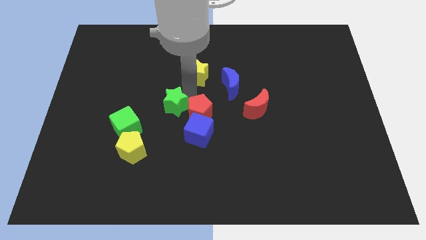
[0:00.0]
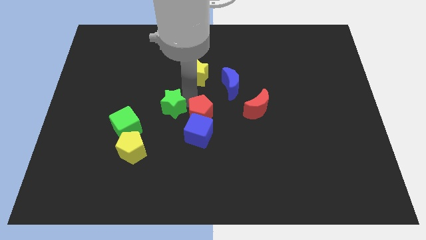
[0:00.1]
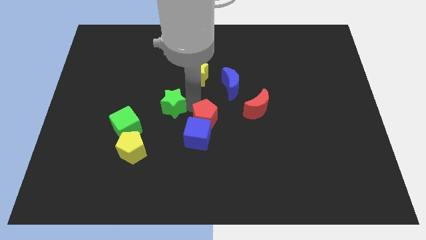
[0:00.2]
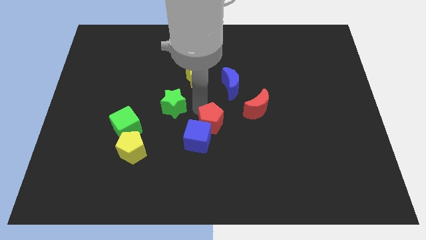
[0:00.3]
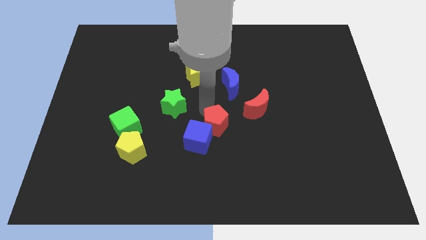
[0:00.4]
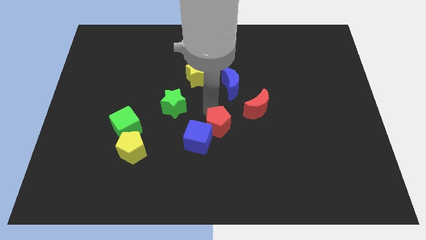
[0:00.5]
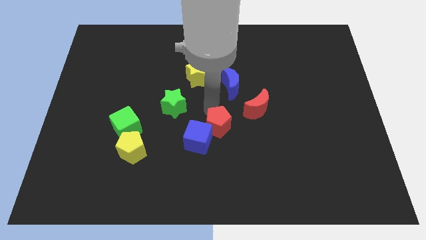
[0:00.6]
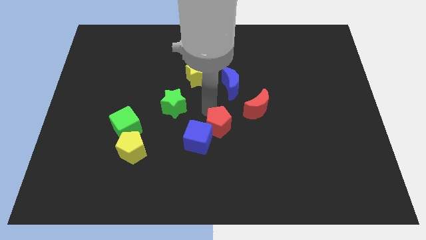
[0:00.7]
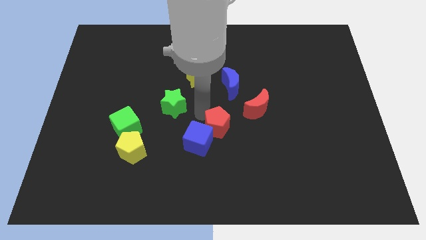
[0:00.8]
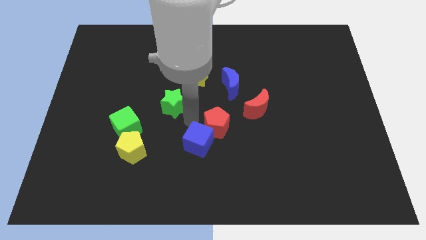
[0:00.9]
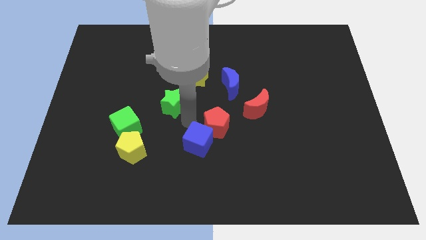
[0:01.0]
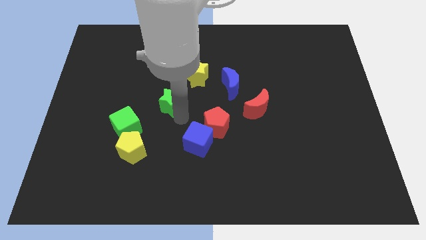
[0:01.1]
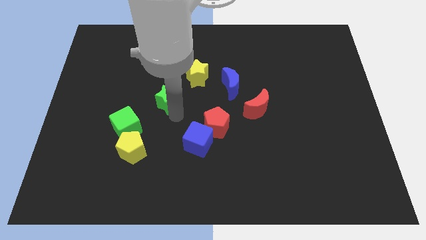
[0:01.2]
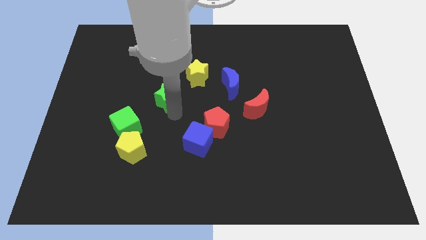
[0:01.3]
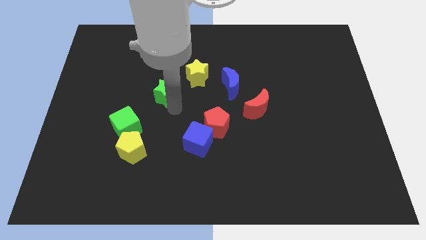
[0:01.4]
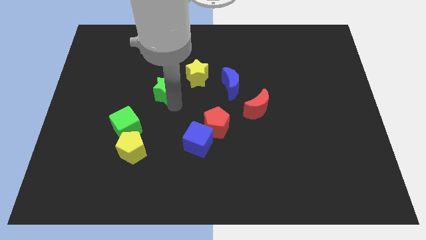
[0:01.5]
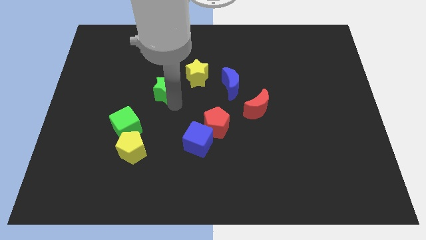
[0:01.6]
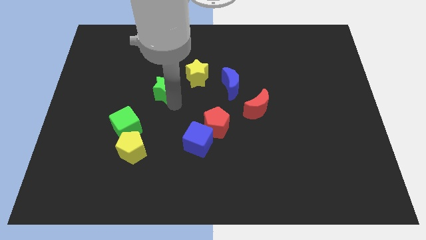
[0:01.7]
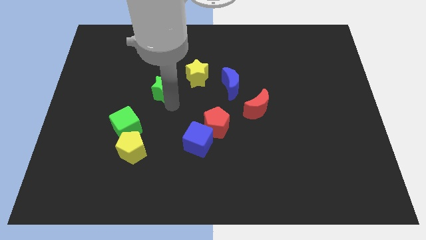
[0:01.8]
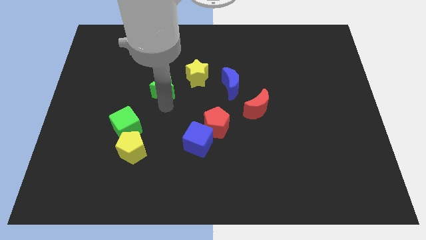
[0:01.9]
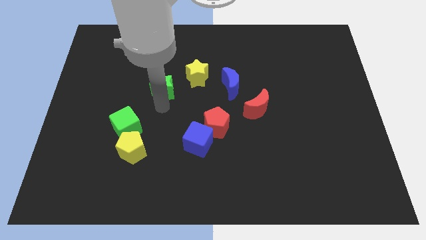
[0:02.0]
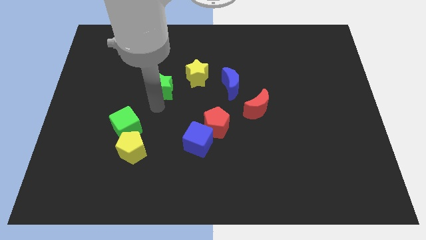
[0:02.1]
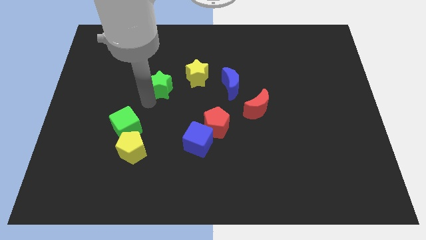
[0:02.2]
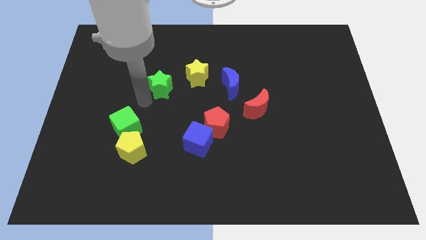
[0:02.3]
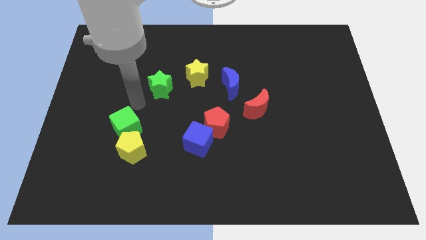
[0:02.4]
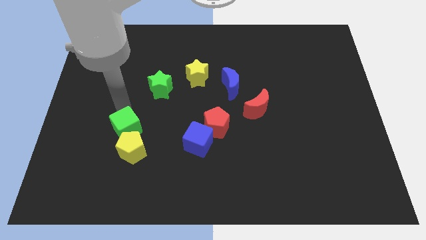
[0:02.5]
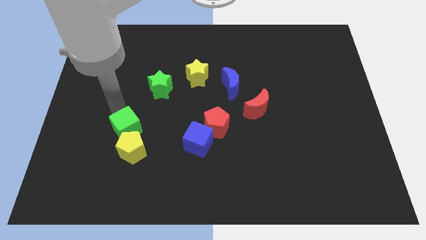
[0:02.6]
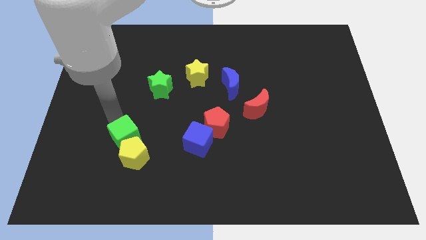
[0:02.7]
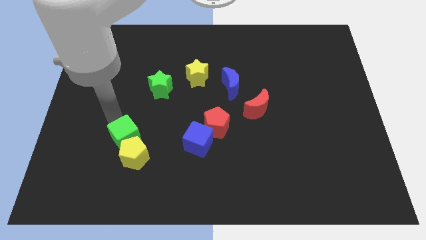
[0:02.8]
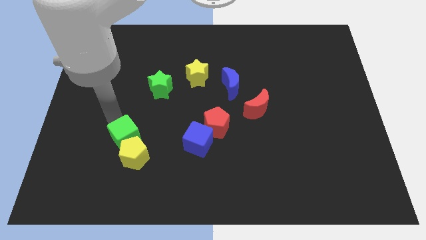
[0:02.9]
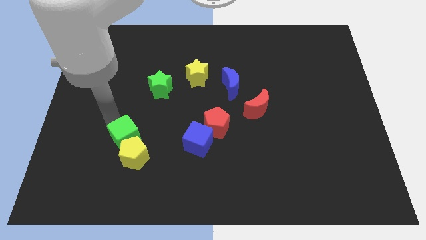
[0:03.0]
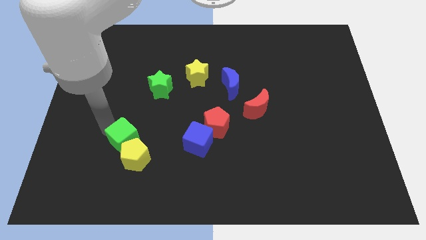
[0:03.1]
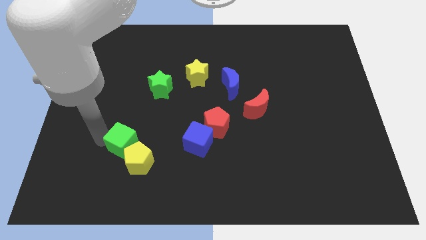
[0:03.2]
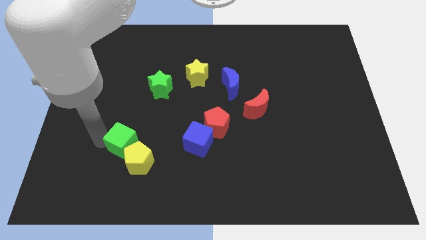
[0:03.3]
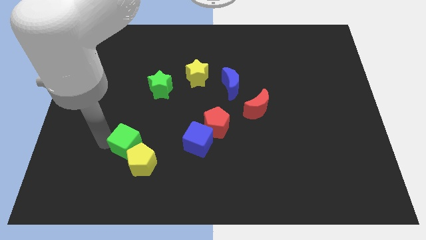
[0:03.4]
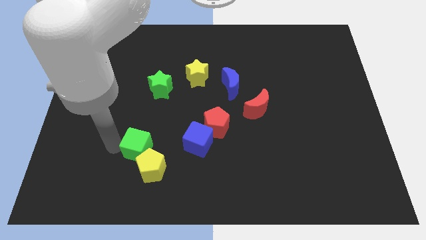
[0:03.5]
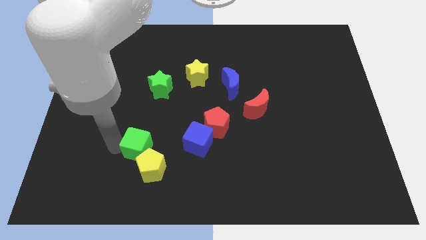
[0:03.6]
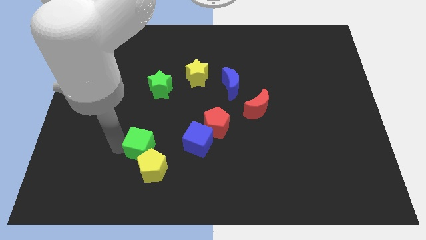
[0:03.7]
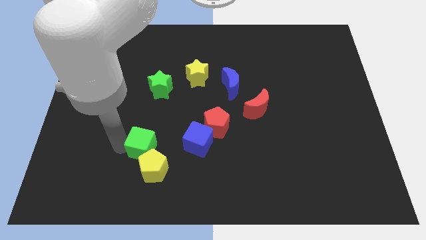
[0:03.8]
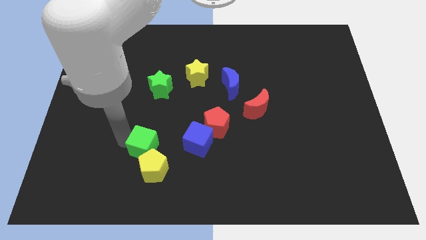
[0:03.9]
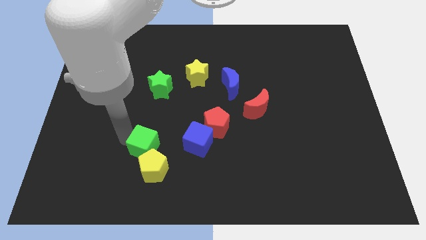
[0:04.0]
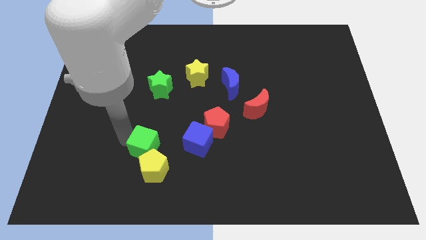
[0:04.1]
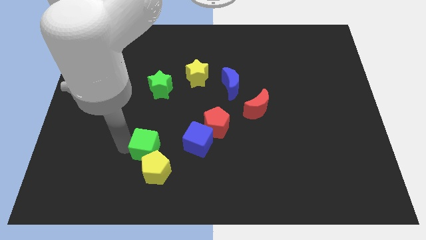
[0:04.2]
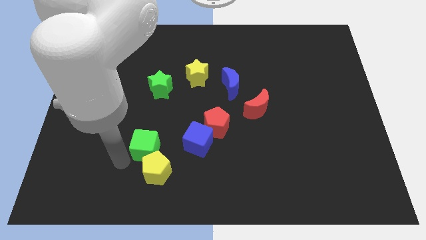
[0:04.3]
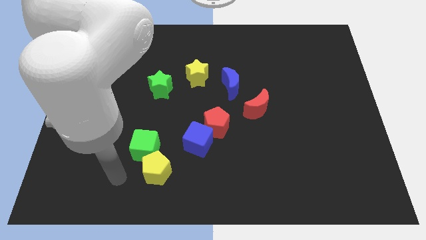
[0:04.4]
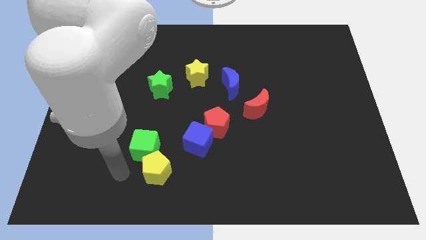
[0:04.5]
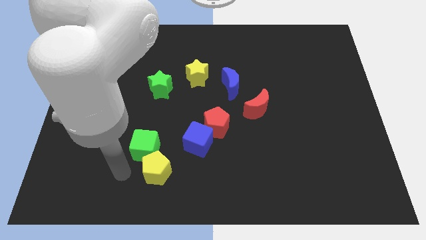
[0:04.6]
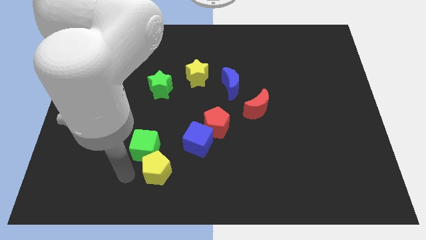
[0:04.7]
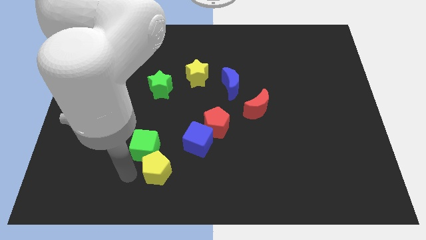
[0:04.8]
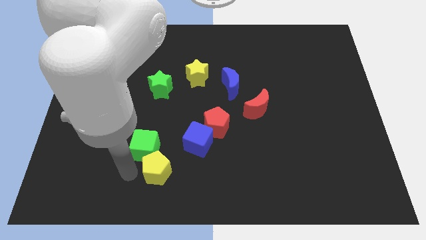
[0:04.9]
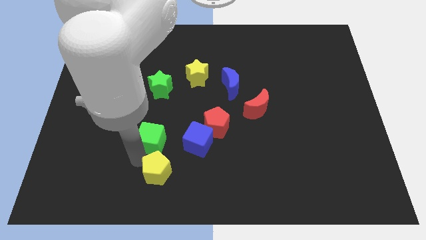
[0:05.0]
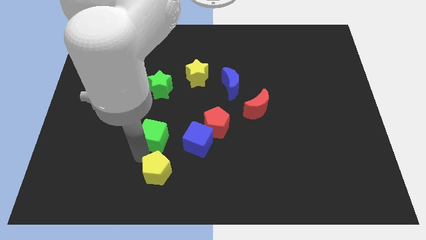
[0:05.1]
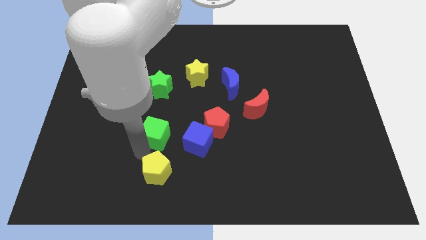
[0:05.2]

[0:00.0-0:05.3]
separate the green block from the yellow pentagon

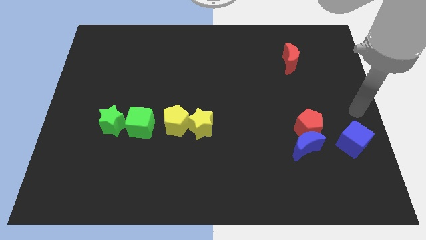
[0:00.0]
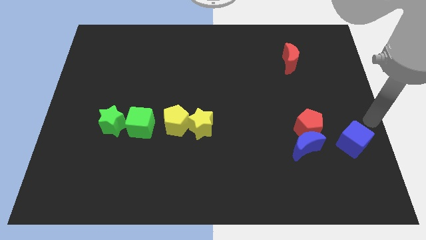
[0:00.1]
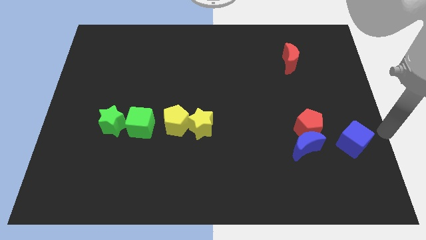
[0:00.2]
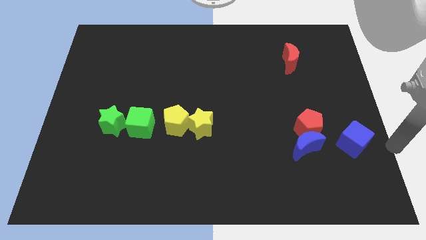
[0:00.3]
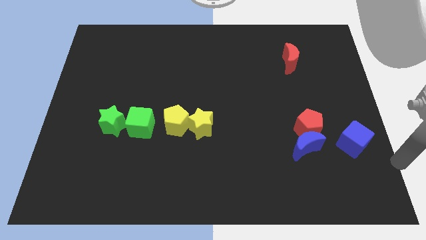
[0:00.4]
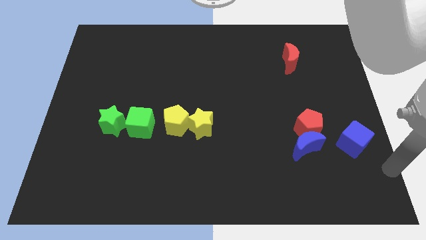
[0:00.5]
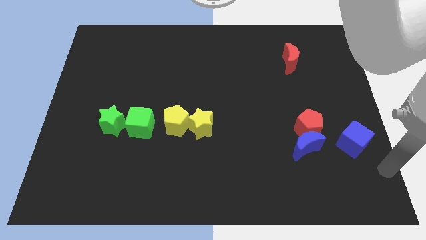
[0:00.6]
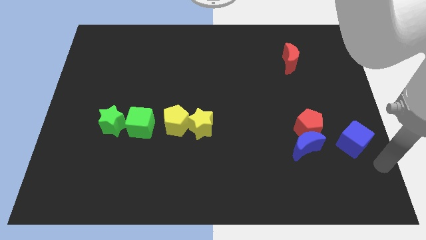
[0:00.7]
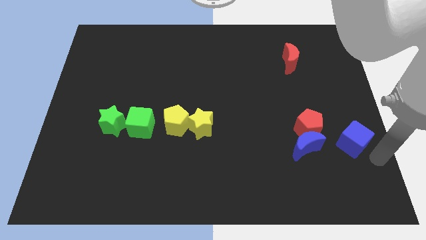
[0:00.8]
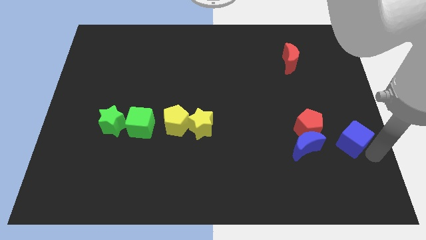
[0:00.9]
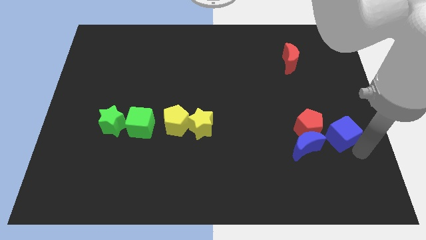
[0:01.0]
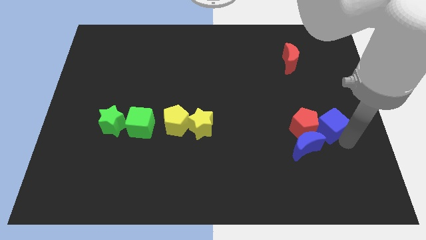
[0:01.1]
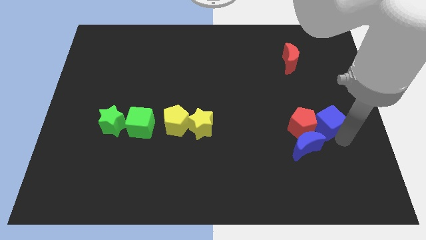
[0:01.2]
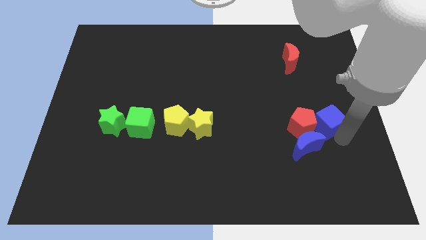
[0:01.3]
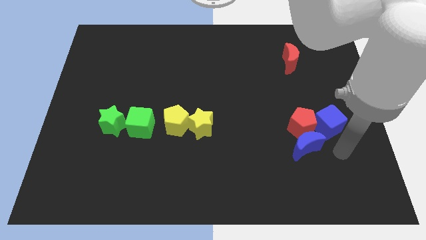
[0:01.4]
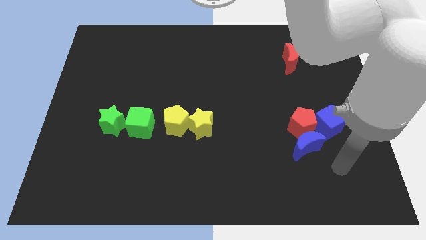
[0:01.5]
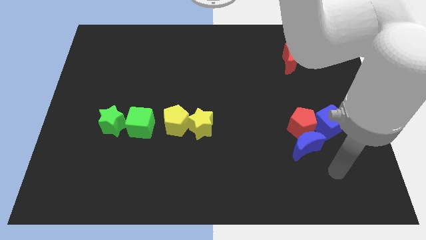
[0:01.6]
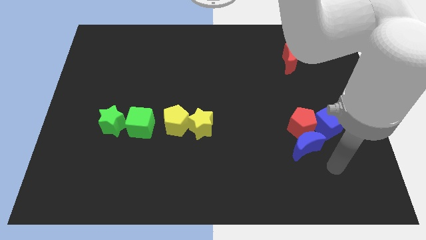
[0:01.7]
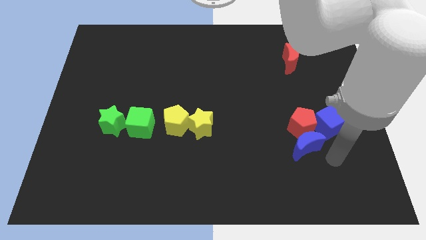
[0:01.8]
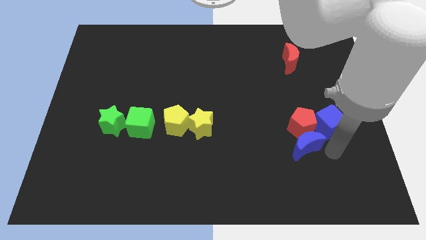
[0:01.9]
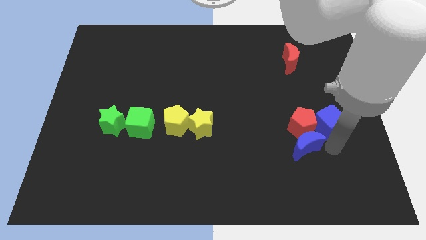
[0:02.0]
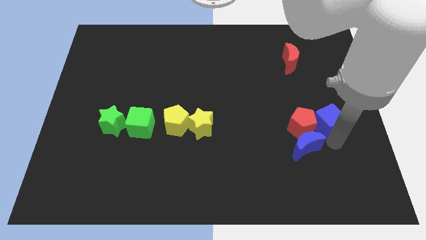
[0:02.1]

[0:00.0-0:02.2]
move blue cube into red pentagon

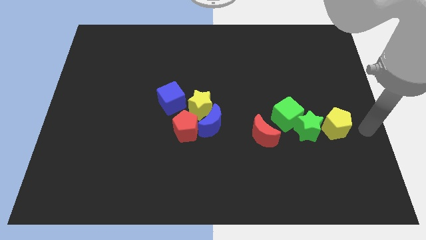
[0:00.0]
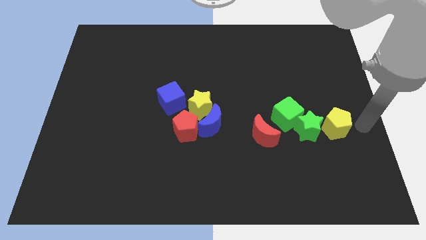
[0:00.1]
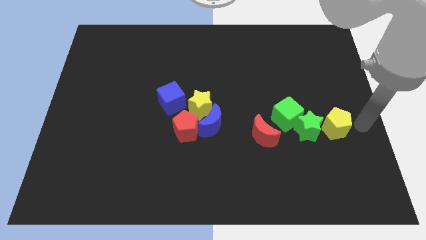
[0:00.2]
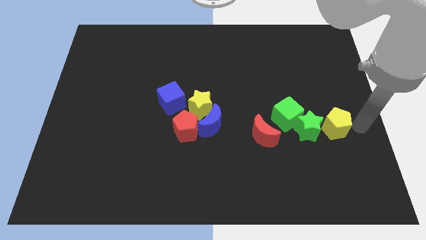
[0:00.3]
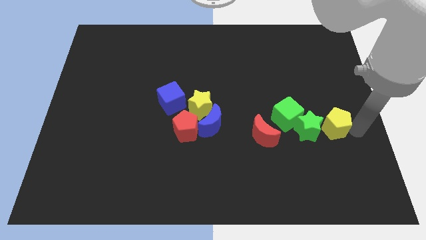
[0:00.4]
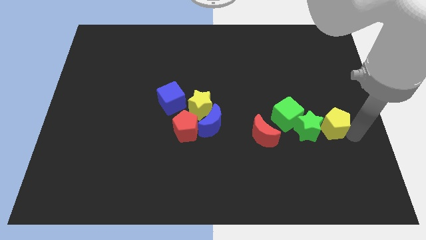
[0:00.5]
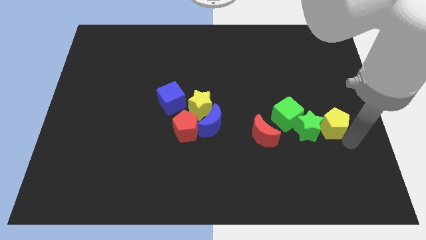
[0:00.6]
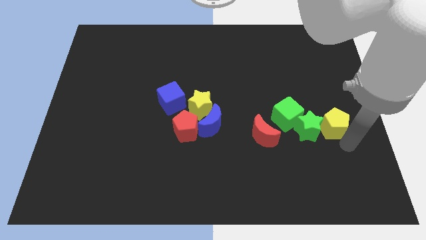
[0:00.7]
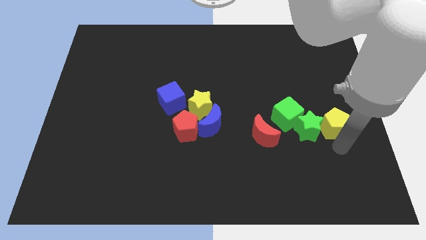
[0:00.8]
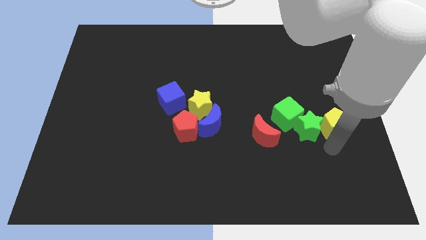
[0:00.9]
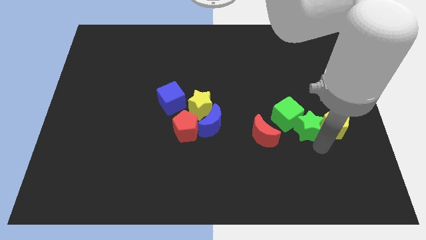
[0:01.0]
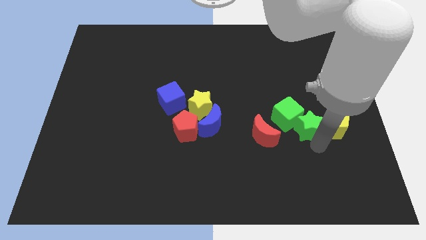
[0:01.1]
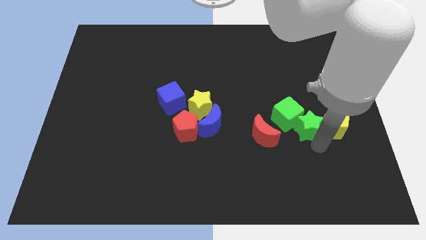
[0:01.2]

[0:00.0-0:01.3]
touch the bottom of yellow pentagon

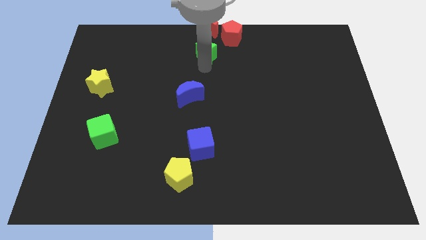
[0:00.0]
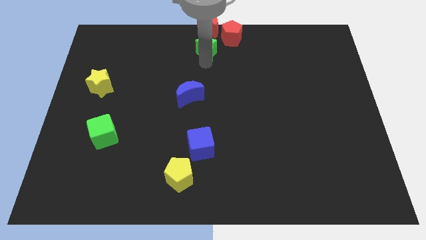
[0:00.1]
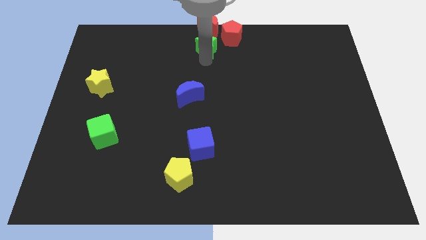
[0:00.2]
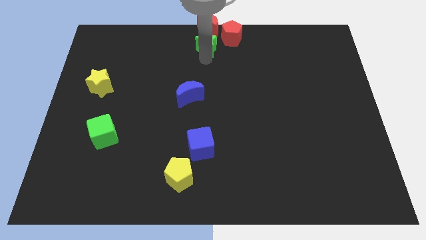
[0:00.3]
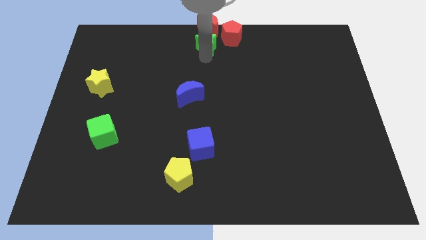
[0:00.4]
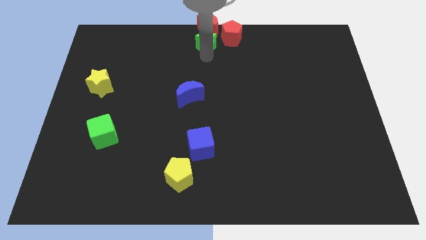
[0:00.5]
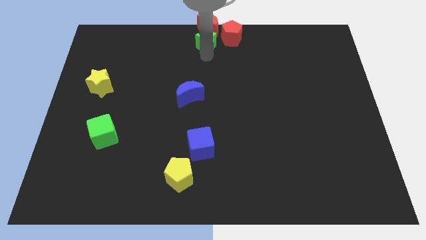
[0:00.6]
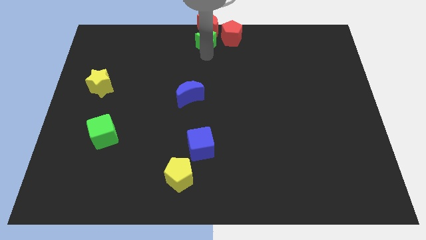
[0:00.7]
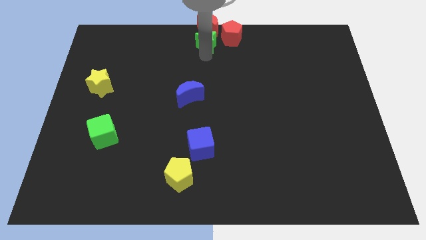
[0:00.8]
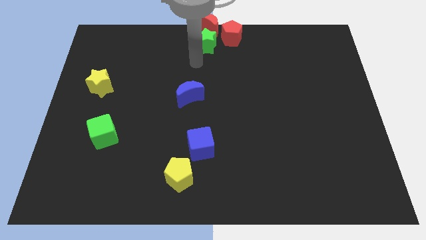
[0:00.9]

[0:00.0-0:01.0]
place the green star at the bottom of the red crescent
